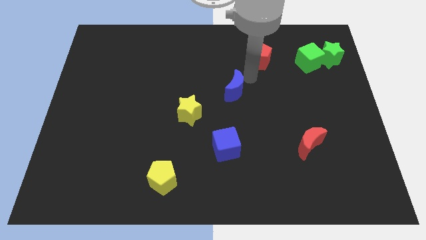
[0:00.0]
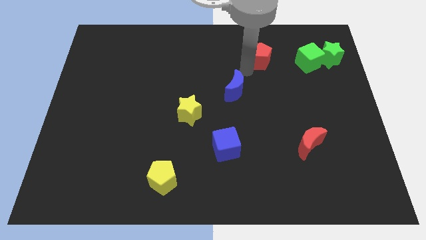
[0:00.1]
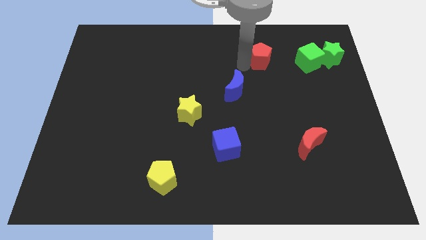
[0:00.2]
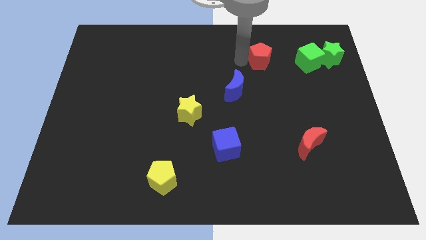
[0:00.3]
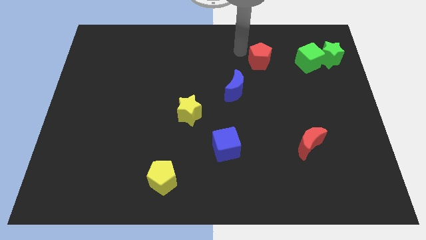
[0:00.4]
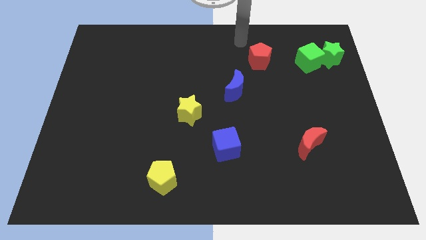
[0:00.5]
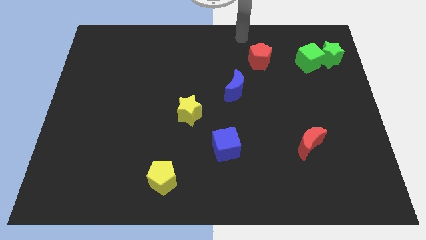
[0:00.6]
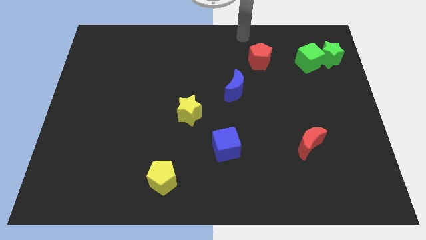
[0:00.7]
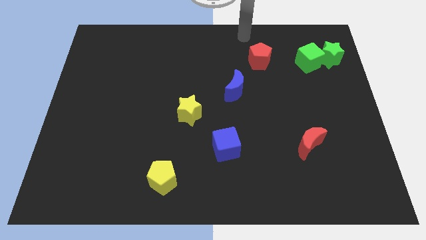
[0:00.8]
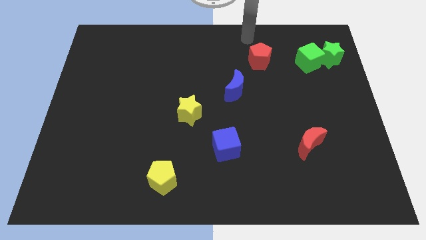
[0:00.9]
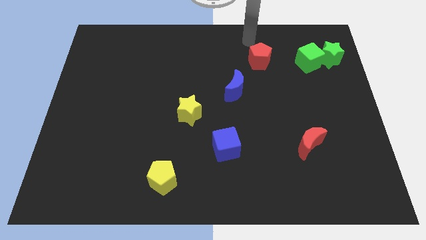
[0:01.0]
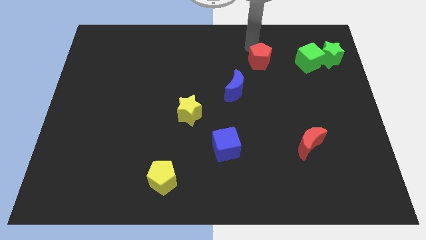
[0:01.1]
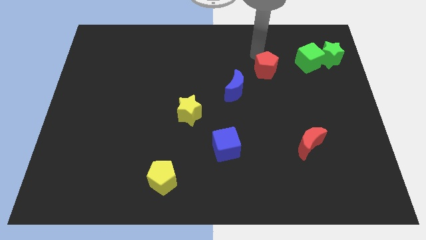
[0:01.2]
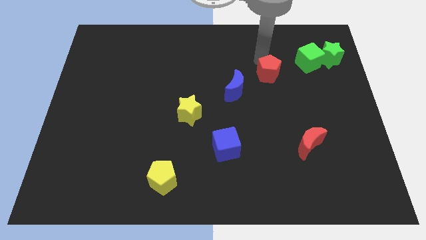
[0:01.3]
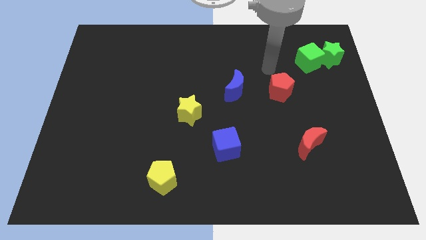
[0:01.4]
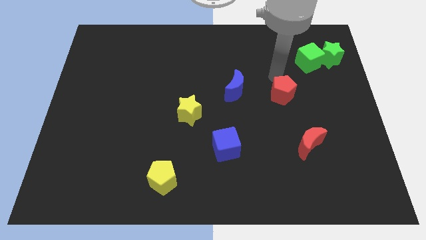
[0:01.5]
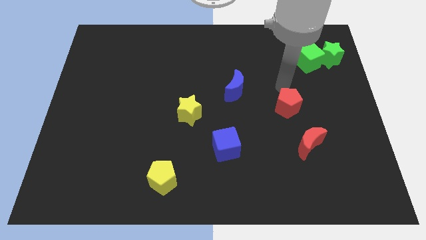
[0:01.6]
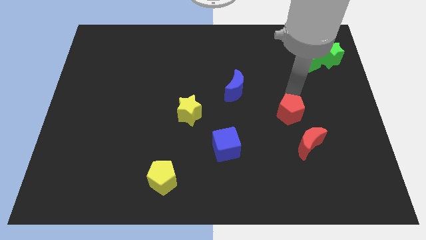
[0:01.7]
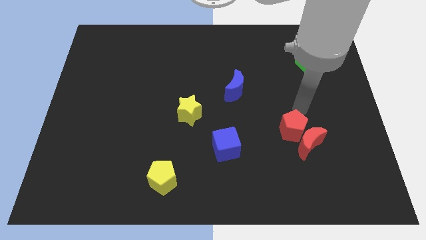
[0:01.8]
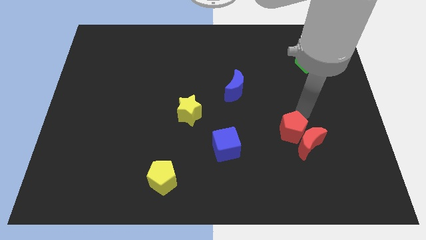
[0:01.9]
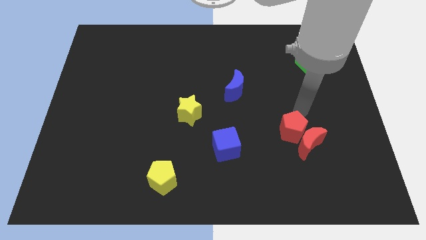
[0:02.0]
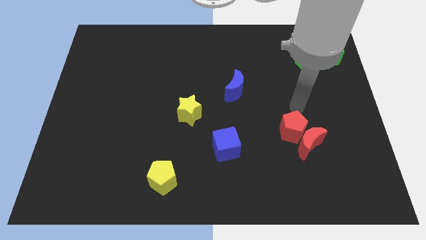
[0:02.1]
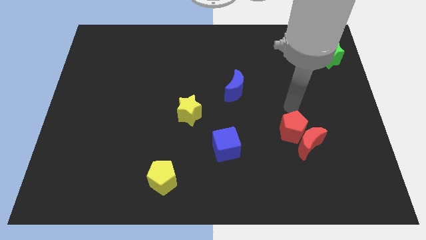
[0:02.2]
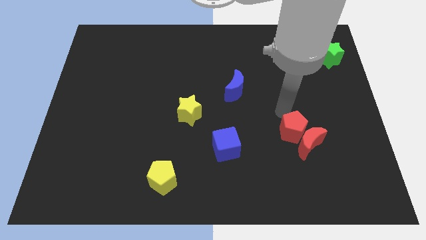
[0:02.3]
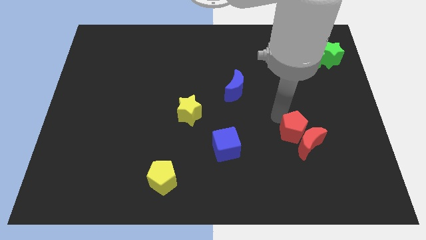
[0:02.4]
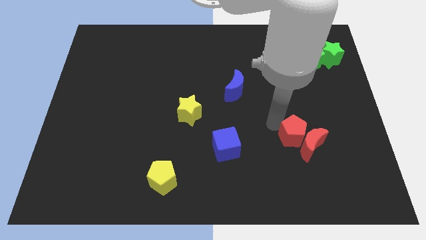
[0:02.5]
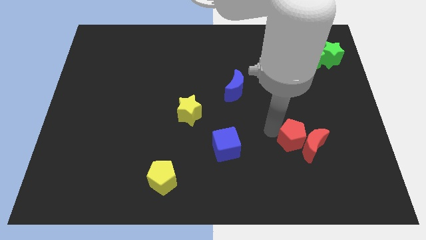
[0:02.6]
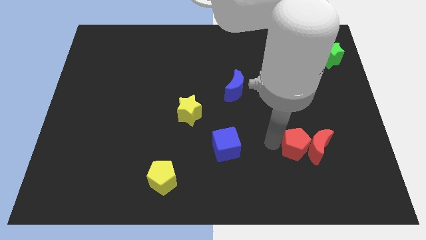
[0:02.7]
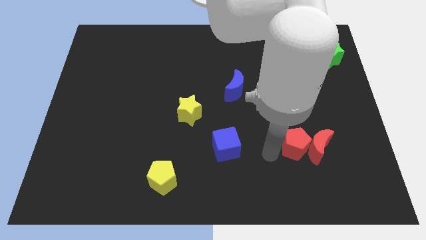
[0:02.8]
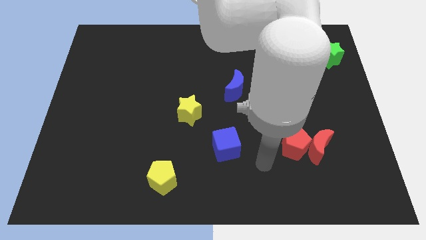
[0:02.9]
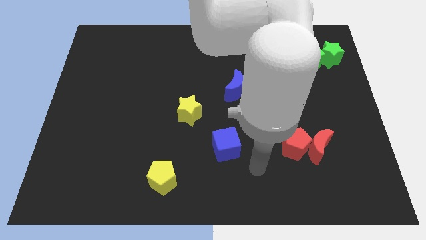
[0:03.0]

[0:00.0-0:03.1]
slide the red pentagon into the red moon

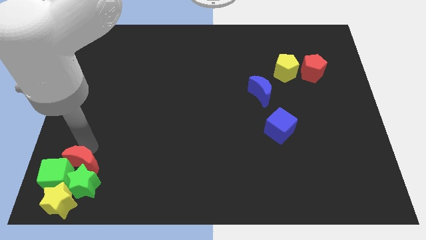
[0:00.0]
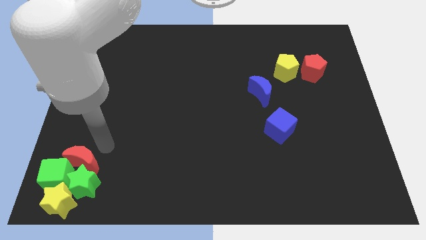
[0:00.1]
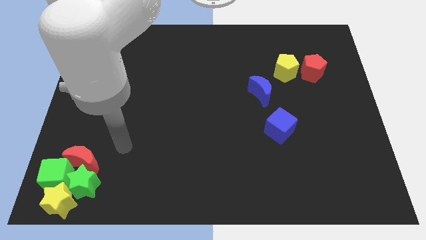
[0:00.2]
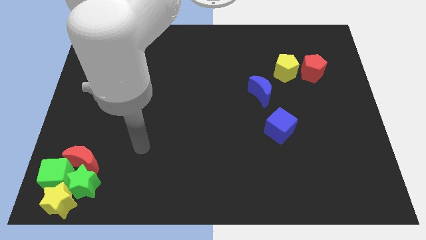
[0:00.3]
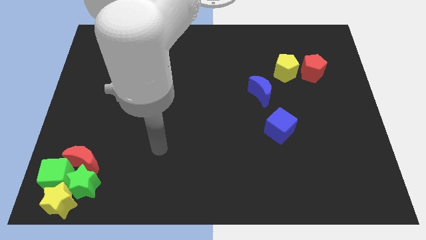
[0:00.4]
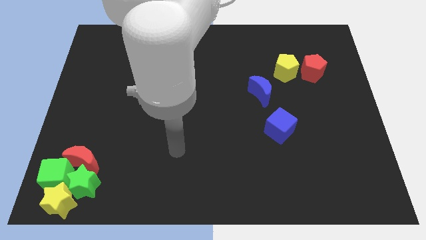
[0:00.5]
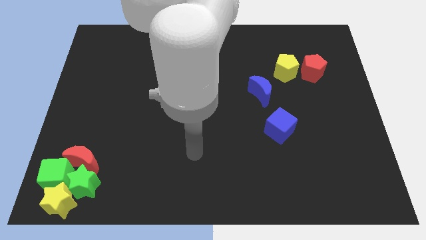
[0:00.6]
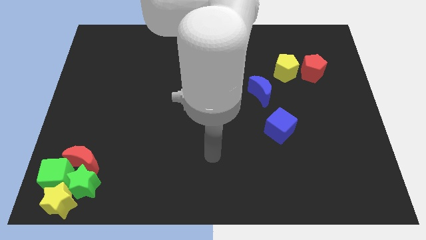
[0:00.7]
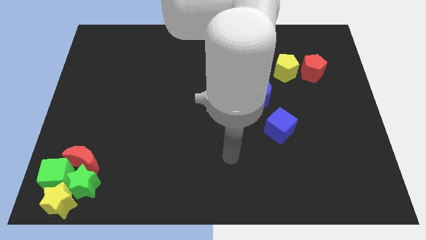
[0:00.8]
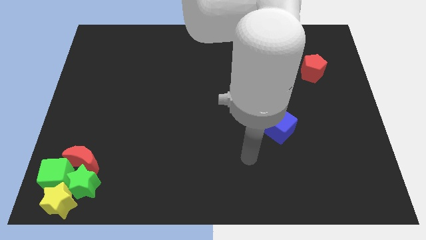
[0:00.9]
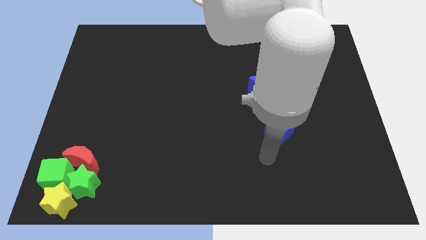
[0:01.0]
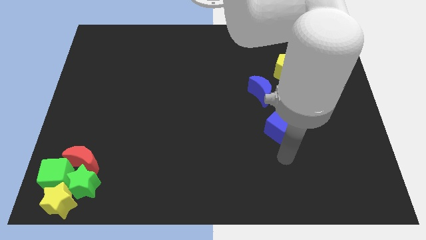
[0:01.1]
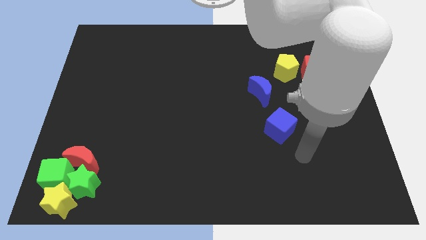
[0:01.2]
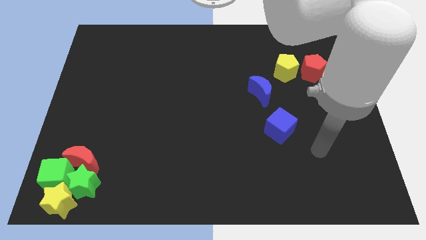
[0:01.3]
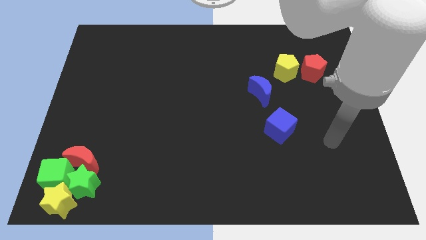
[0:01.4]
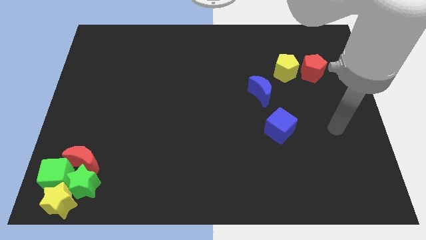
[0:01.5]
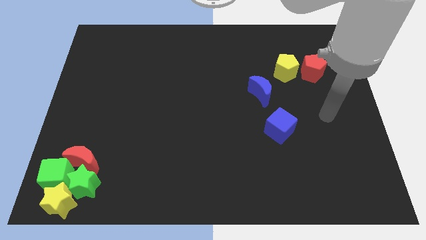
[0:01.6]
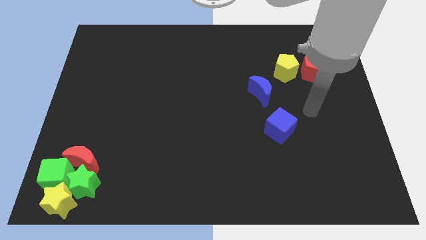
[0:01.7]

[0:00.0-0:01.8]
move your arm away from the red crescent

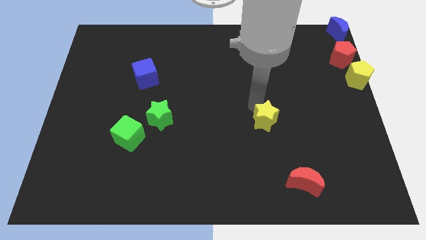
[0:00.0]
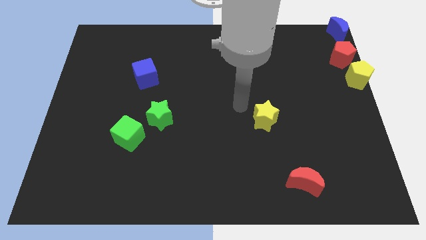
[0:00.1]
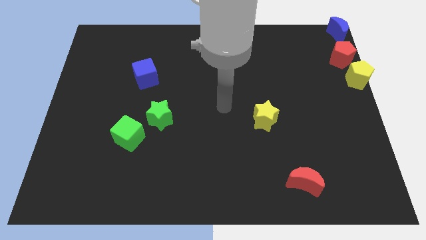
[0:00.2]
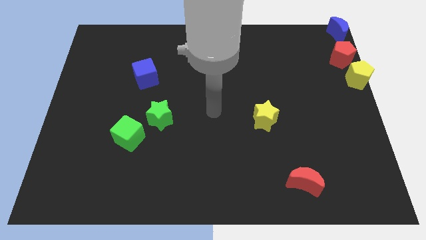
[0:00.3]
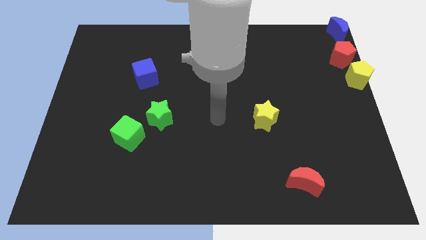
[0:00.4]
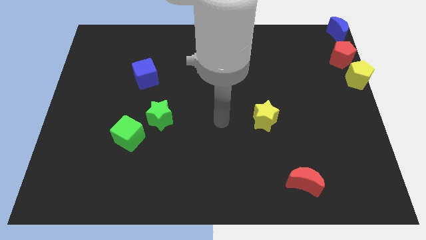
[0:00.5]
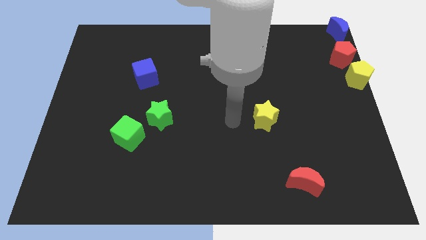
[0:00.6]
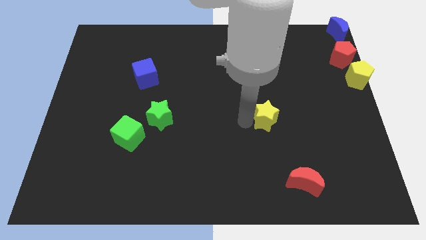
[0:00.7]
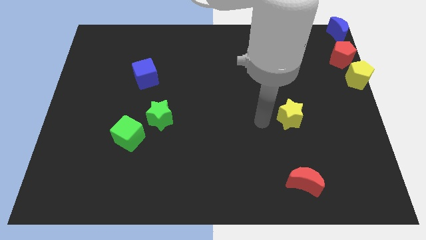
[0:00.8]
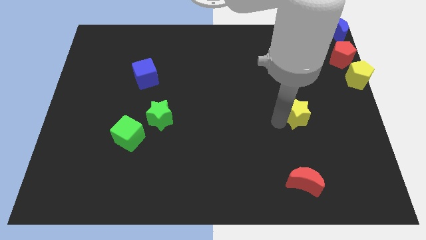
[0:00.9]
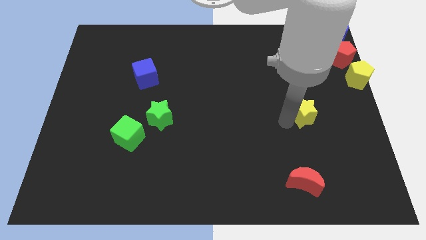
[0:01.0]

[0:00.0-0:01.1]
move the yellow star above the red crescent

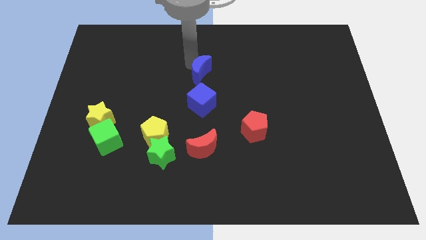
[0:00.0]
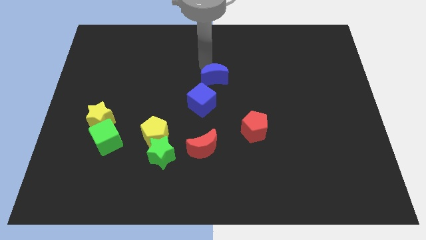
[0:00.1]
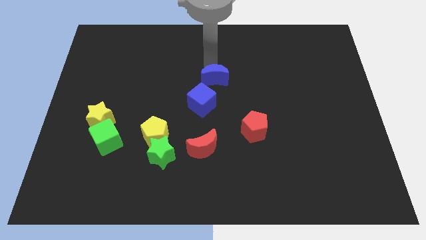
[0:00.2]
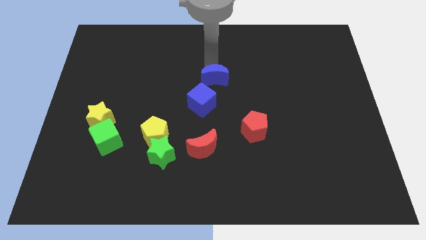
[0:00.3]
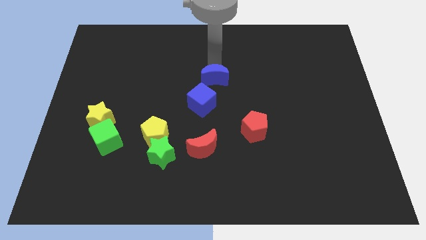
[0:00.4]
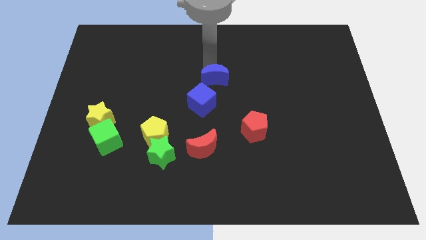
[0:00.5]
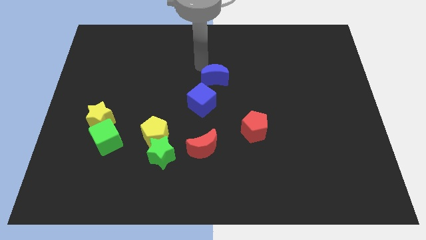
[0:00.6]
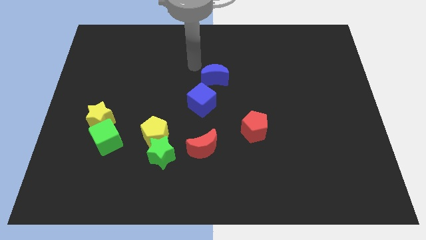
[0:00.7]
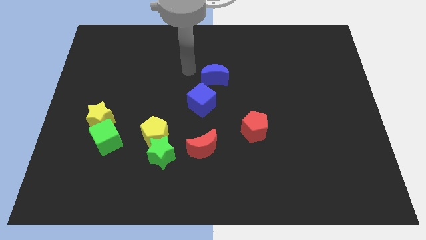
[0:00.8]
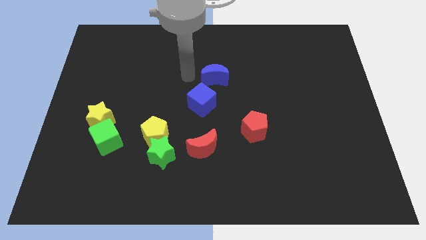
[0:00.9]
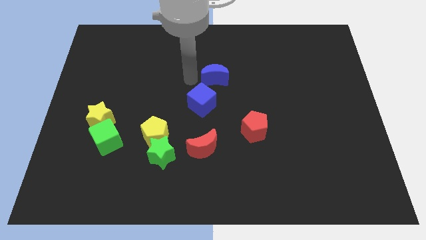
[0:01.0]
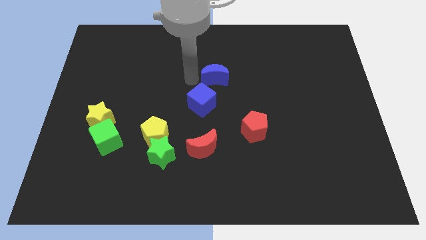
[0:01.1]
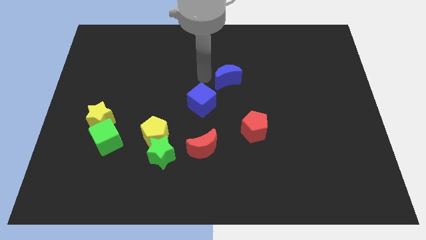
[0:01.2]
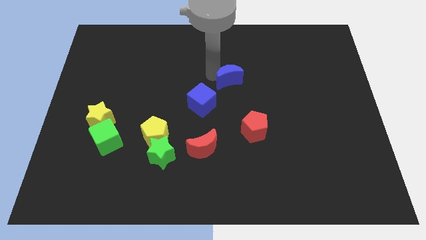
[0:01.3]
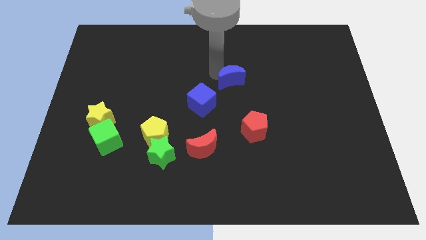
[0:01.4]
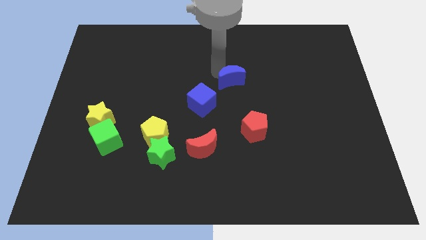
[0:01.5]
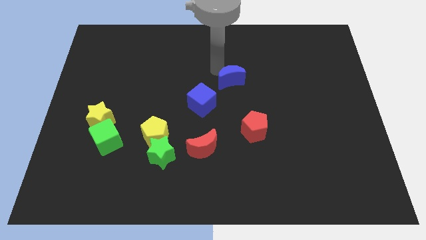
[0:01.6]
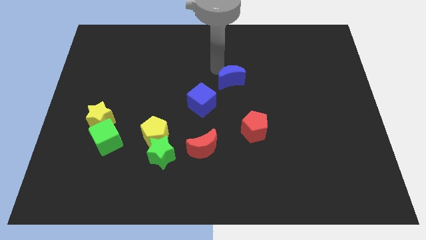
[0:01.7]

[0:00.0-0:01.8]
slide move the blue moon

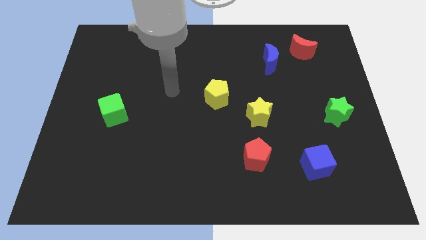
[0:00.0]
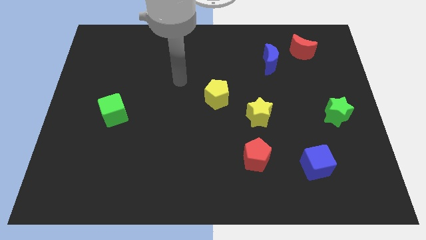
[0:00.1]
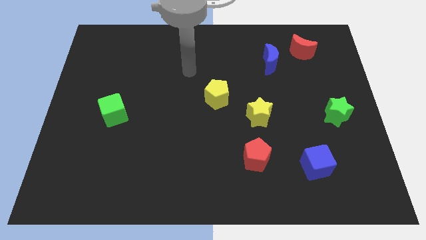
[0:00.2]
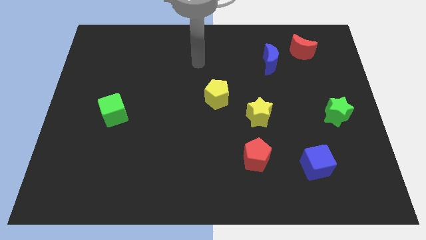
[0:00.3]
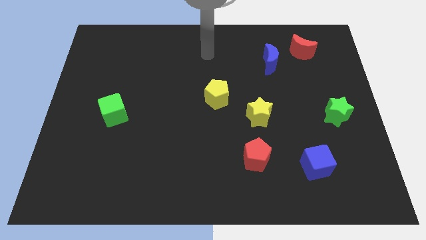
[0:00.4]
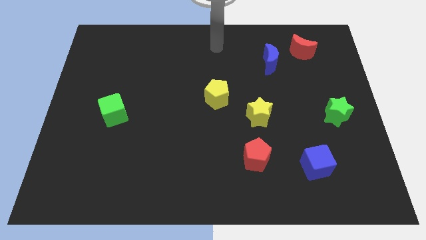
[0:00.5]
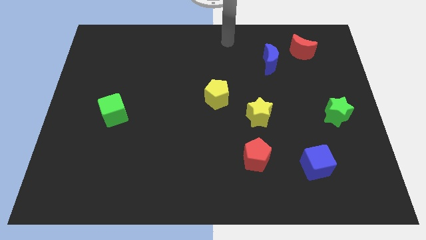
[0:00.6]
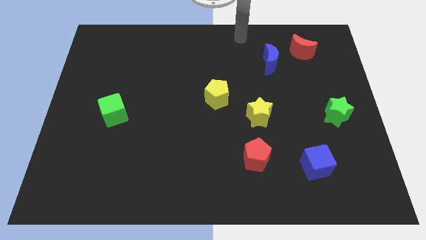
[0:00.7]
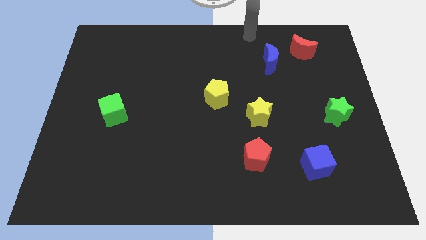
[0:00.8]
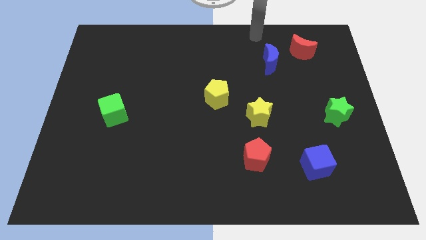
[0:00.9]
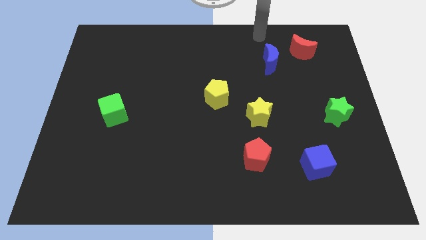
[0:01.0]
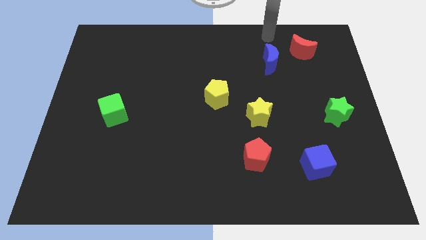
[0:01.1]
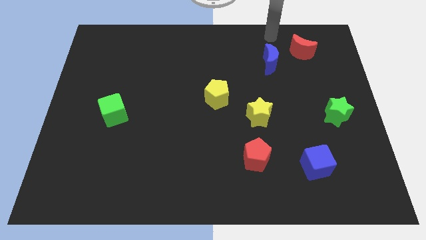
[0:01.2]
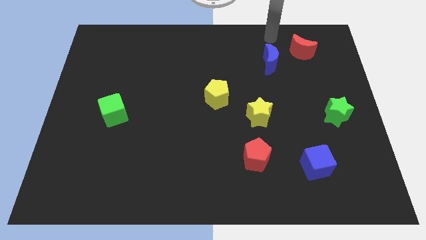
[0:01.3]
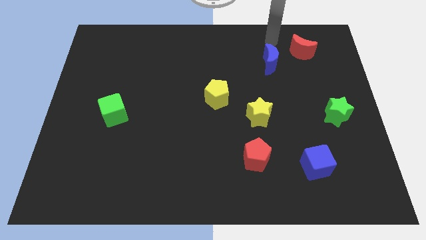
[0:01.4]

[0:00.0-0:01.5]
point your arm at the top of the blue crescent
